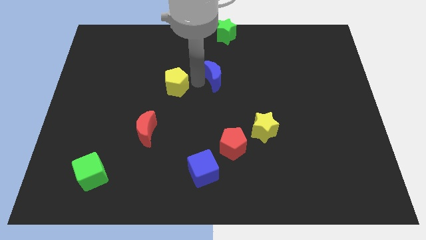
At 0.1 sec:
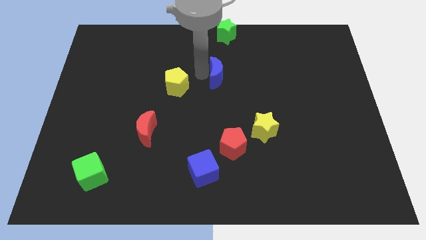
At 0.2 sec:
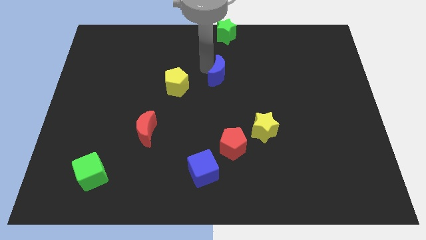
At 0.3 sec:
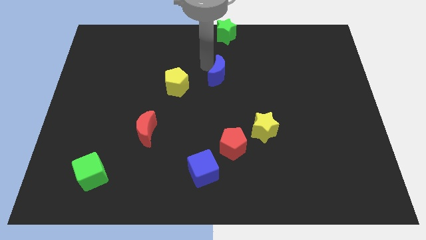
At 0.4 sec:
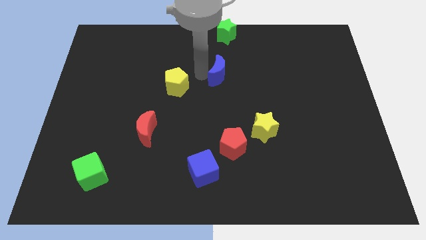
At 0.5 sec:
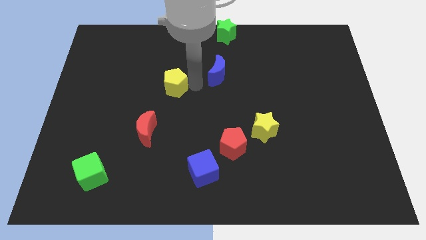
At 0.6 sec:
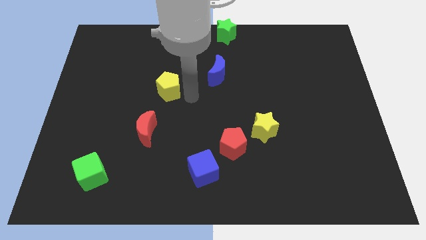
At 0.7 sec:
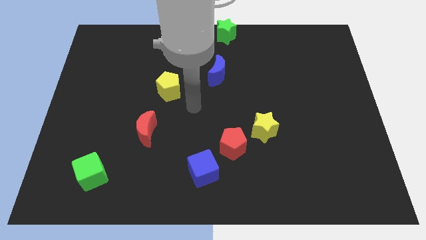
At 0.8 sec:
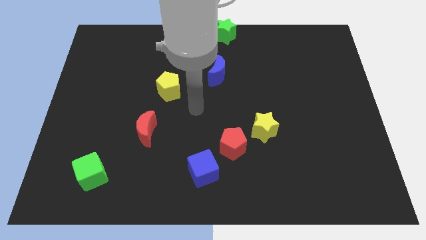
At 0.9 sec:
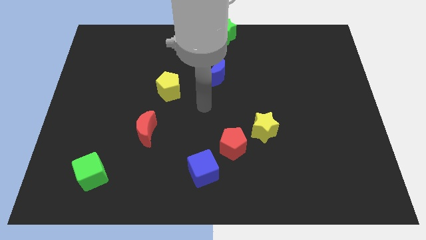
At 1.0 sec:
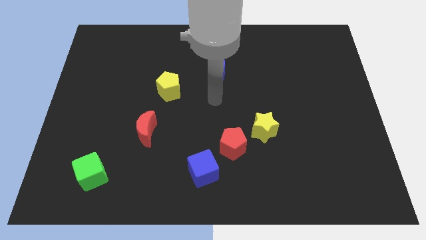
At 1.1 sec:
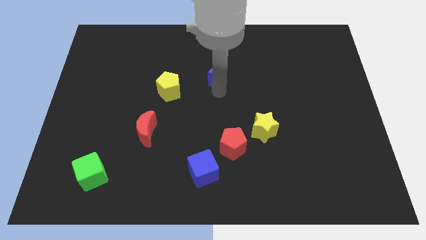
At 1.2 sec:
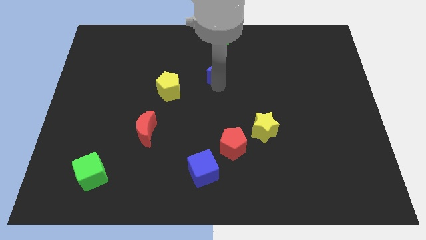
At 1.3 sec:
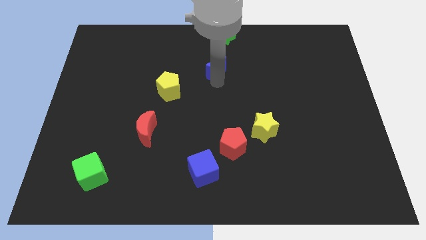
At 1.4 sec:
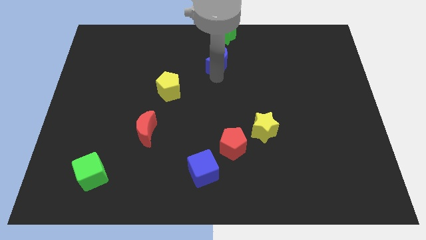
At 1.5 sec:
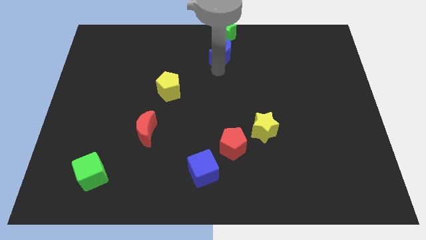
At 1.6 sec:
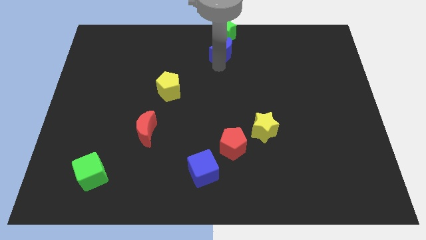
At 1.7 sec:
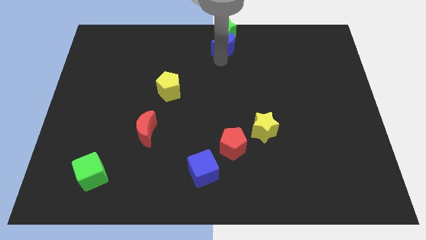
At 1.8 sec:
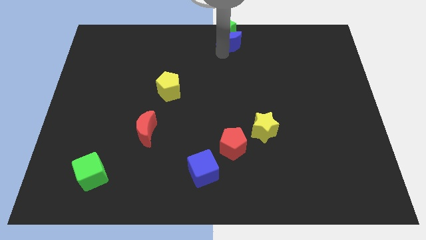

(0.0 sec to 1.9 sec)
move blue moon towards the green star

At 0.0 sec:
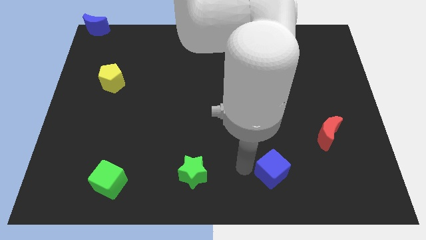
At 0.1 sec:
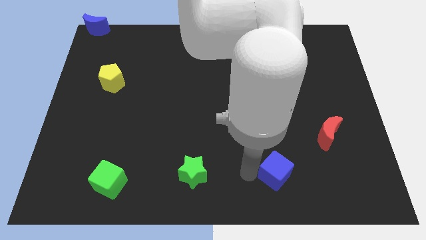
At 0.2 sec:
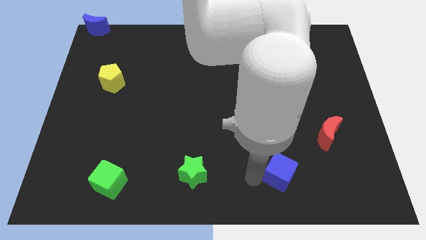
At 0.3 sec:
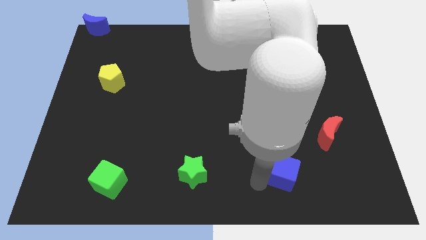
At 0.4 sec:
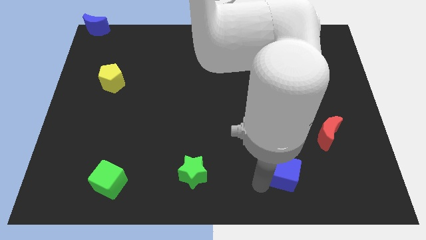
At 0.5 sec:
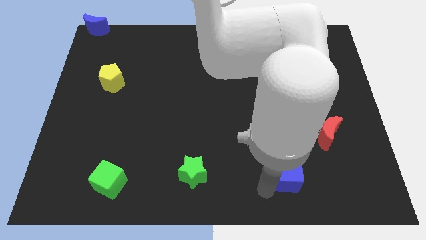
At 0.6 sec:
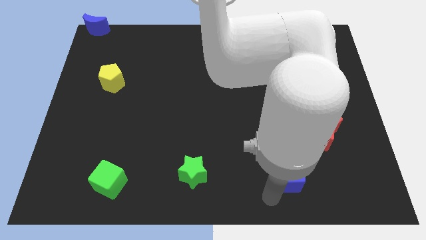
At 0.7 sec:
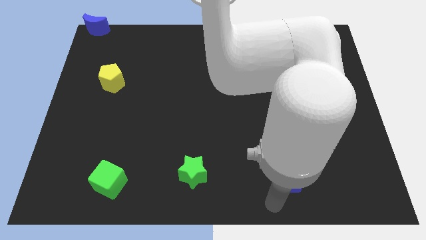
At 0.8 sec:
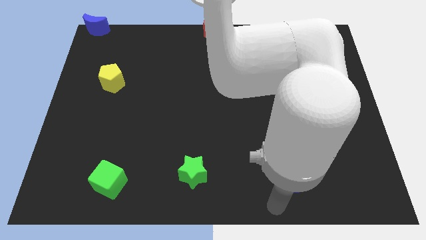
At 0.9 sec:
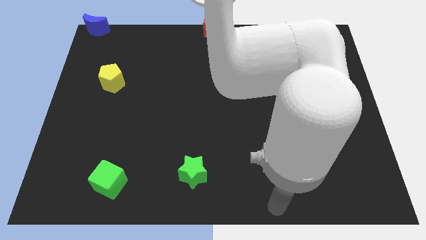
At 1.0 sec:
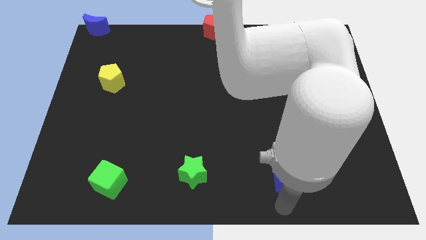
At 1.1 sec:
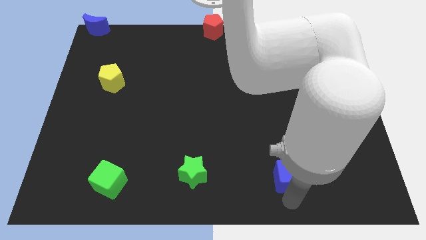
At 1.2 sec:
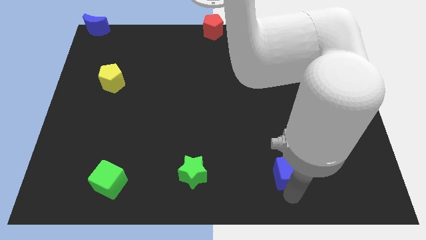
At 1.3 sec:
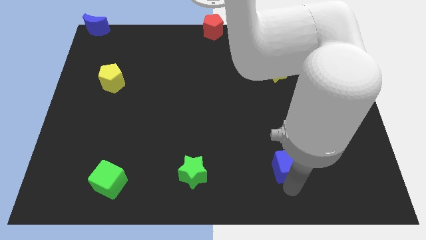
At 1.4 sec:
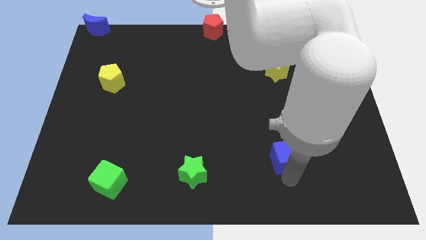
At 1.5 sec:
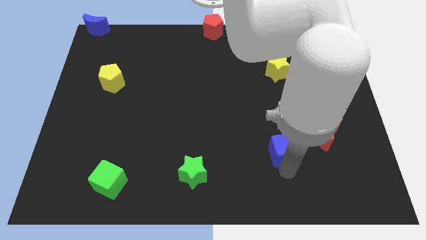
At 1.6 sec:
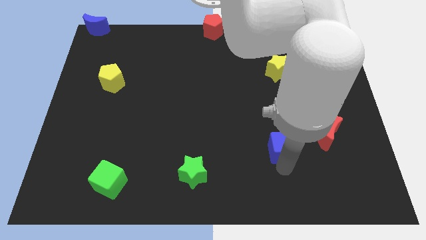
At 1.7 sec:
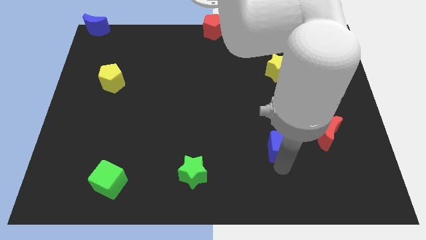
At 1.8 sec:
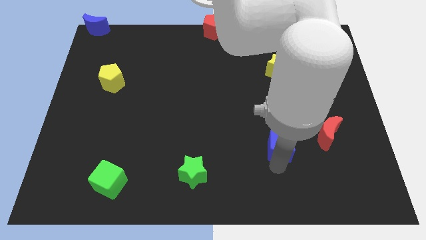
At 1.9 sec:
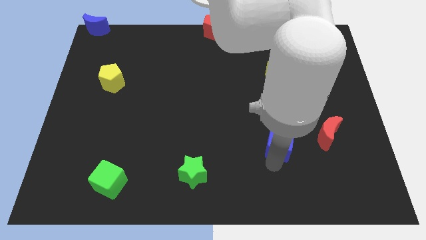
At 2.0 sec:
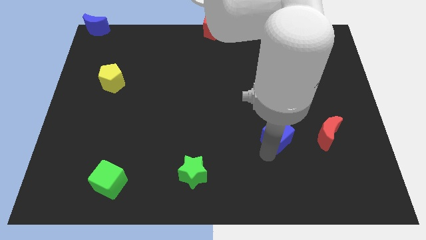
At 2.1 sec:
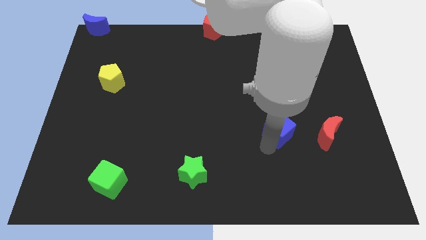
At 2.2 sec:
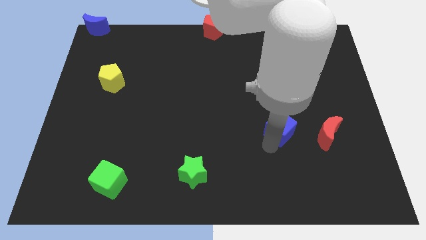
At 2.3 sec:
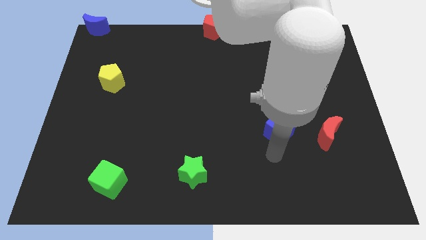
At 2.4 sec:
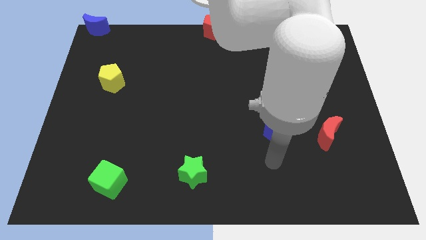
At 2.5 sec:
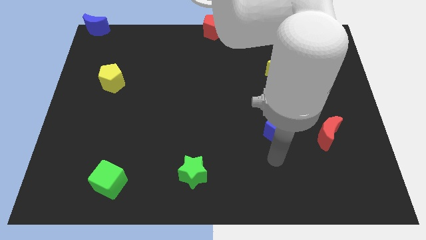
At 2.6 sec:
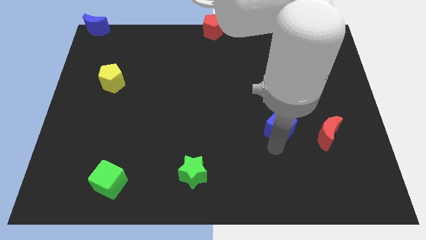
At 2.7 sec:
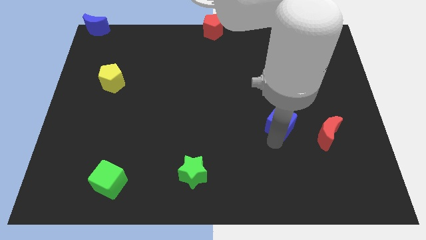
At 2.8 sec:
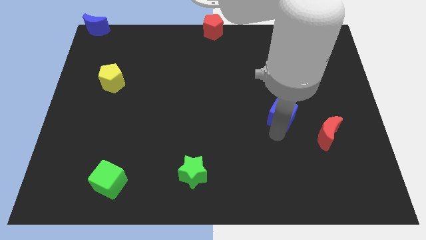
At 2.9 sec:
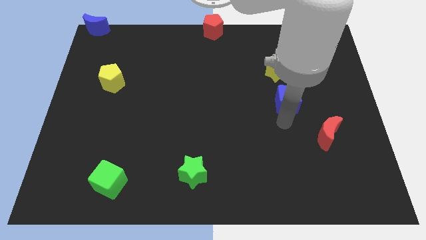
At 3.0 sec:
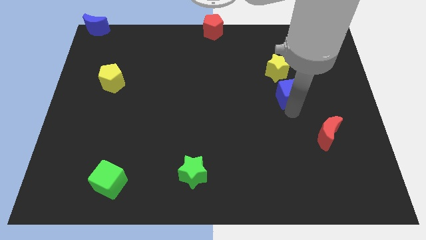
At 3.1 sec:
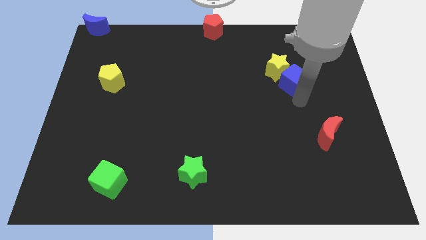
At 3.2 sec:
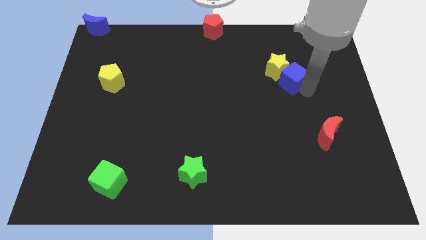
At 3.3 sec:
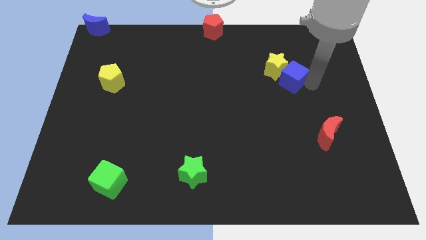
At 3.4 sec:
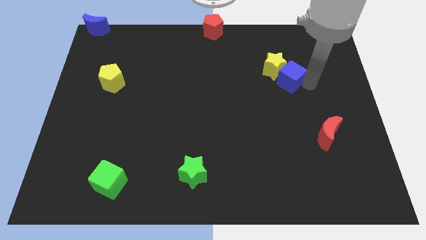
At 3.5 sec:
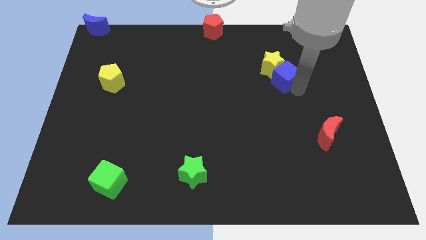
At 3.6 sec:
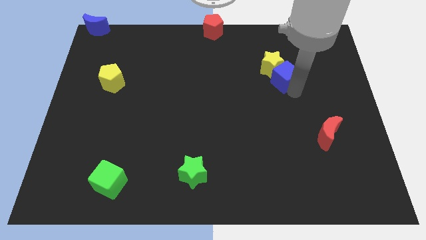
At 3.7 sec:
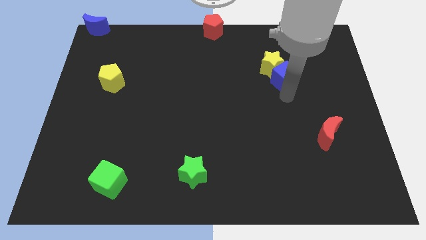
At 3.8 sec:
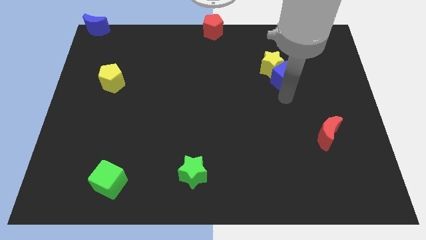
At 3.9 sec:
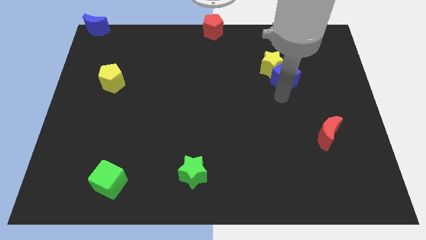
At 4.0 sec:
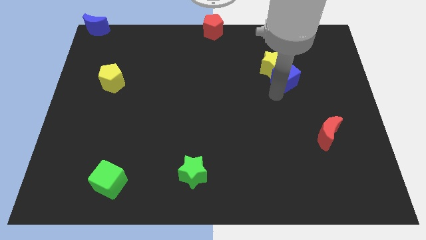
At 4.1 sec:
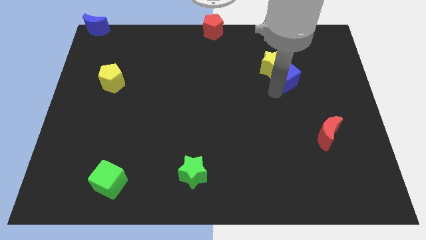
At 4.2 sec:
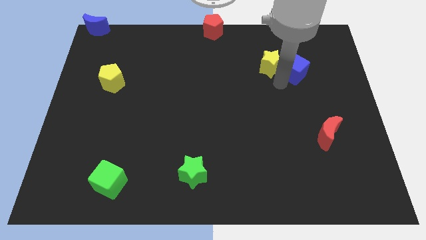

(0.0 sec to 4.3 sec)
push blue cube into yellow star

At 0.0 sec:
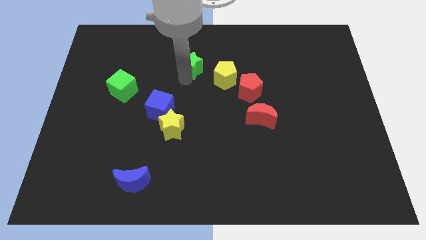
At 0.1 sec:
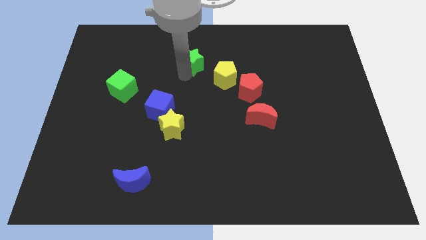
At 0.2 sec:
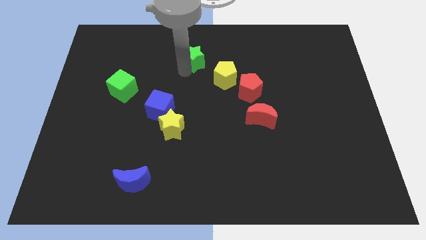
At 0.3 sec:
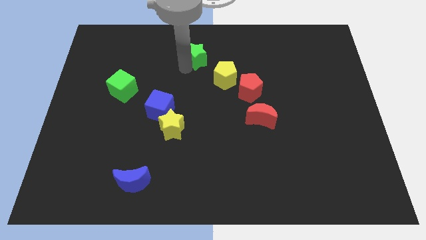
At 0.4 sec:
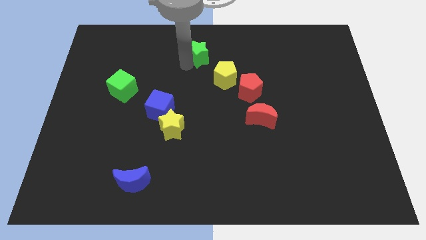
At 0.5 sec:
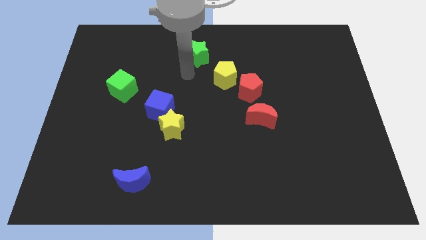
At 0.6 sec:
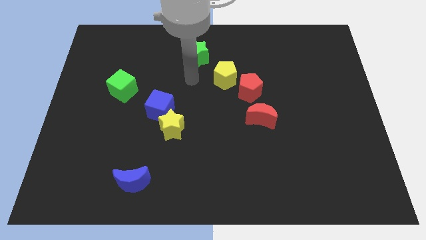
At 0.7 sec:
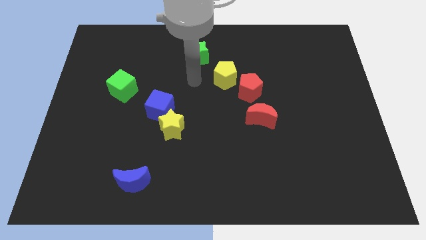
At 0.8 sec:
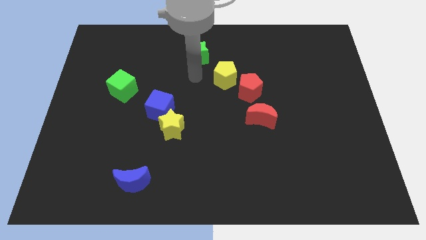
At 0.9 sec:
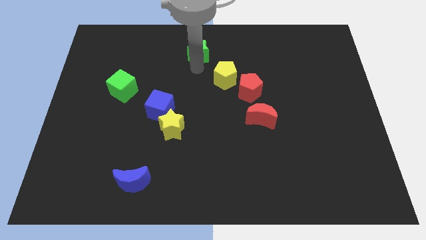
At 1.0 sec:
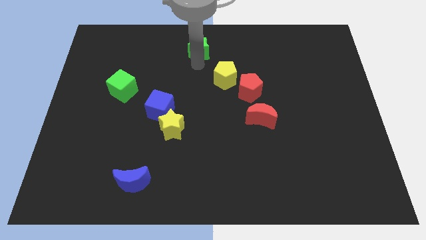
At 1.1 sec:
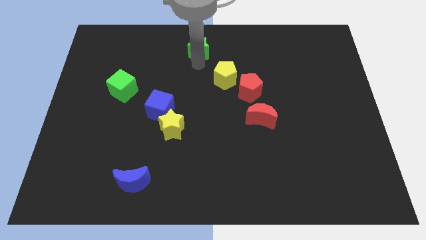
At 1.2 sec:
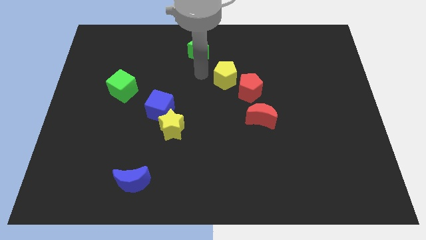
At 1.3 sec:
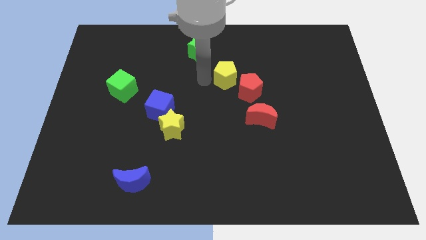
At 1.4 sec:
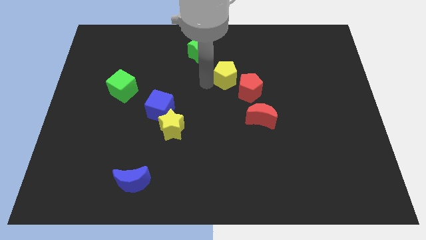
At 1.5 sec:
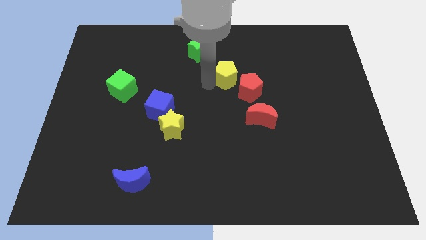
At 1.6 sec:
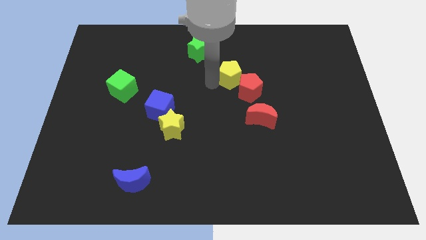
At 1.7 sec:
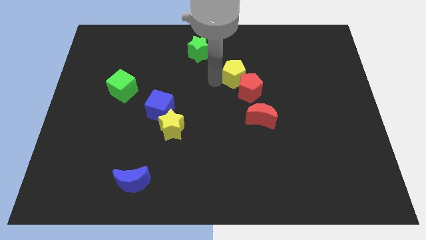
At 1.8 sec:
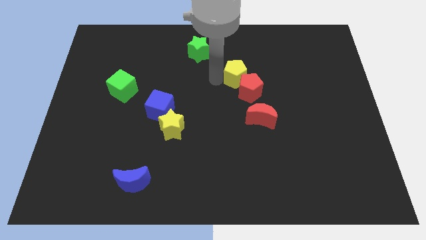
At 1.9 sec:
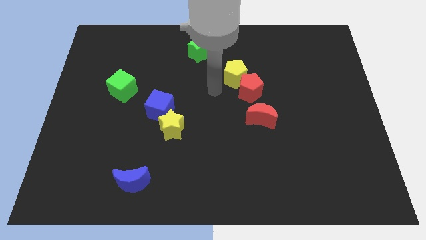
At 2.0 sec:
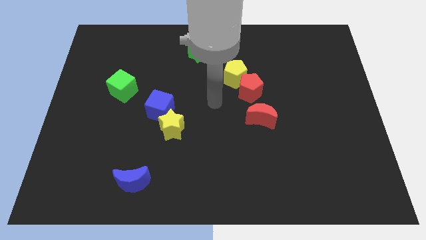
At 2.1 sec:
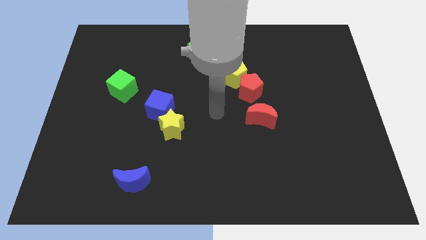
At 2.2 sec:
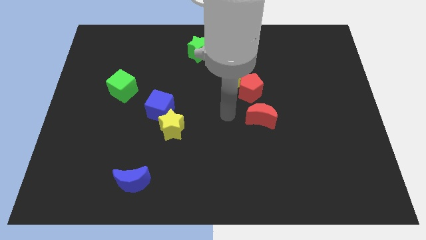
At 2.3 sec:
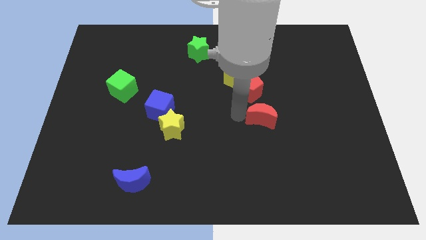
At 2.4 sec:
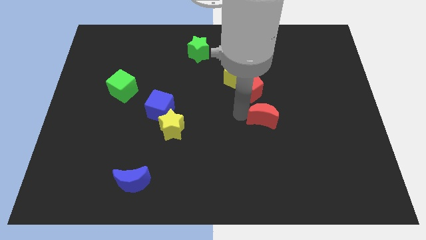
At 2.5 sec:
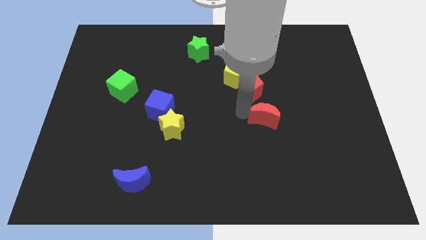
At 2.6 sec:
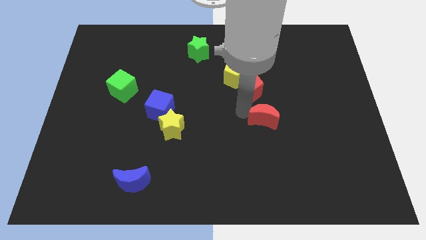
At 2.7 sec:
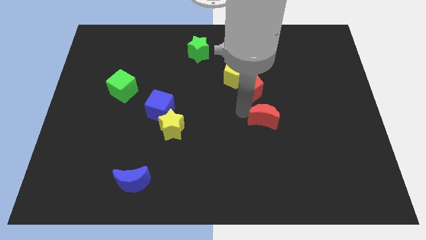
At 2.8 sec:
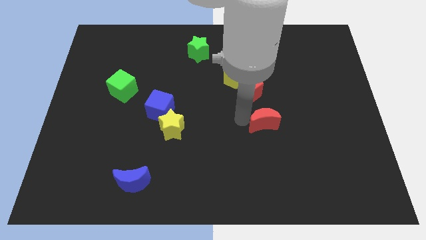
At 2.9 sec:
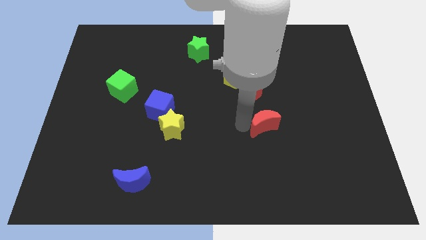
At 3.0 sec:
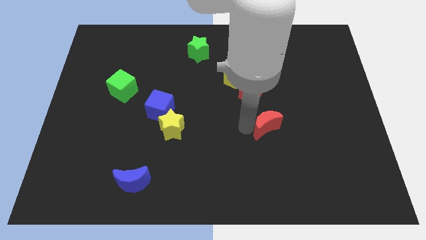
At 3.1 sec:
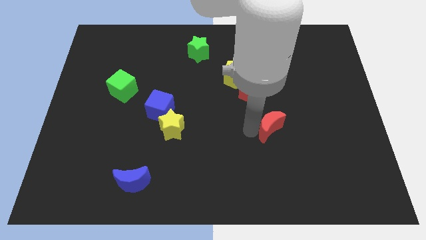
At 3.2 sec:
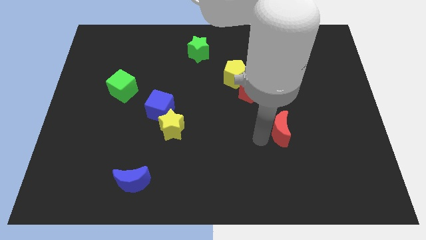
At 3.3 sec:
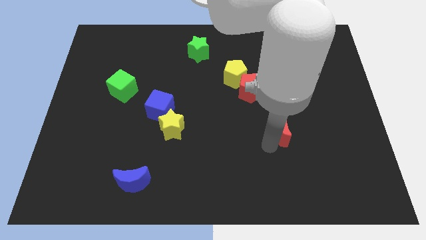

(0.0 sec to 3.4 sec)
slightly push the red moon down
